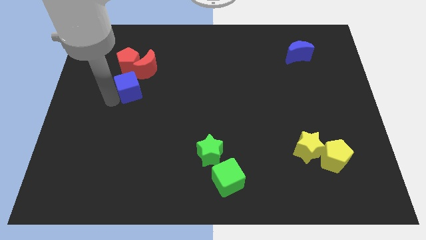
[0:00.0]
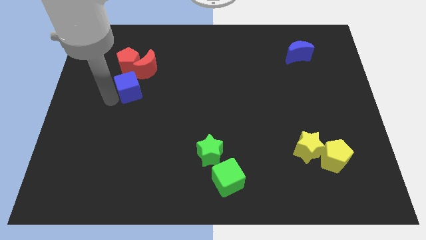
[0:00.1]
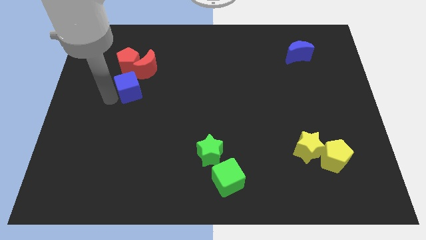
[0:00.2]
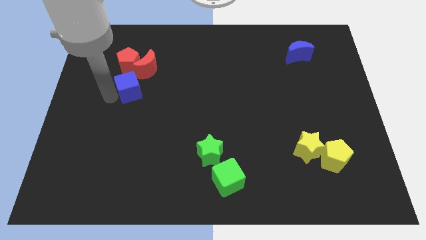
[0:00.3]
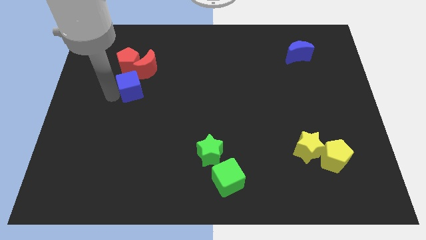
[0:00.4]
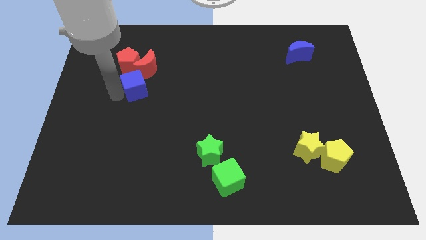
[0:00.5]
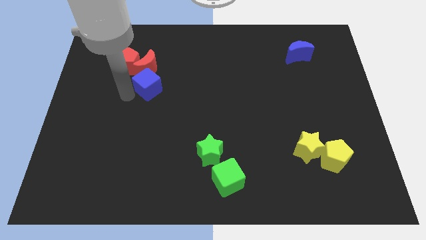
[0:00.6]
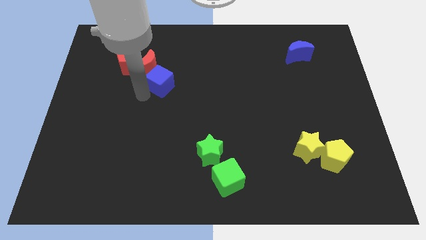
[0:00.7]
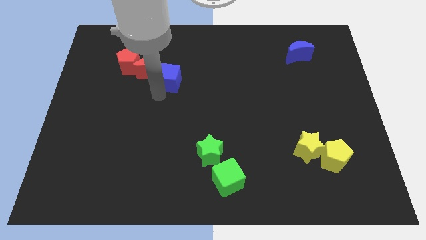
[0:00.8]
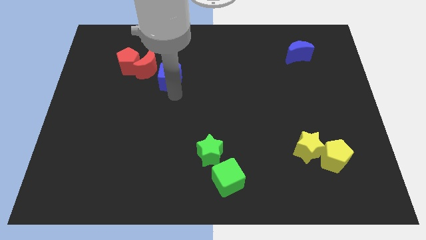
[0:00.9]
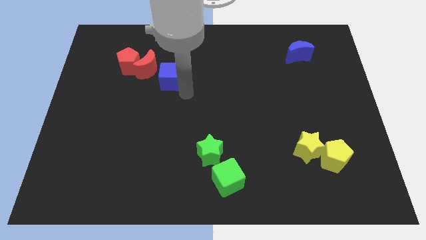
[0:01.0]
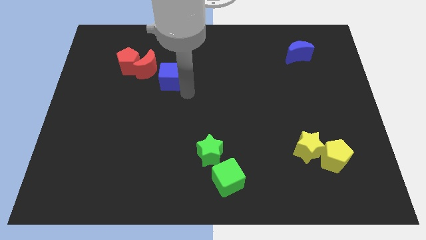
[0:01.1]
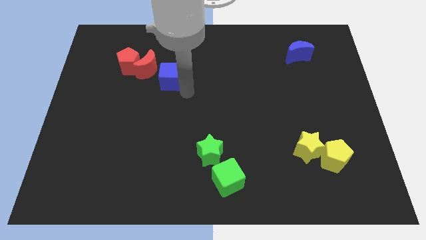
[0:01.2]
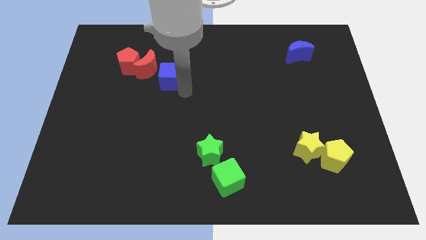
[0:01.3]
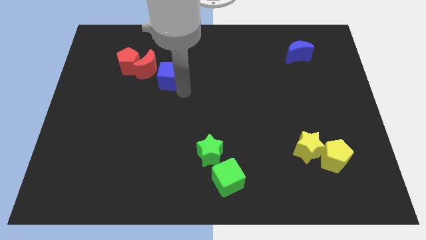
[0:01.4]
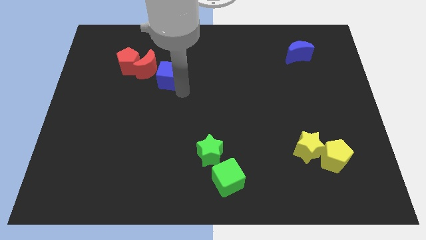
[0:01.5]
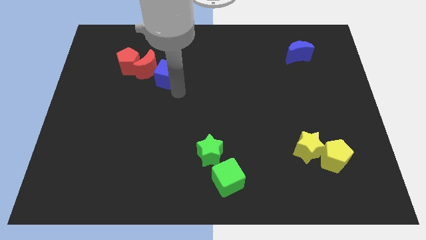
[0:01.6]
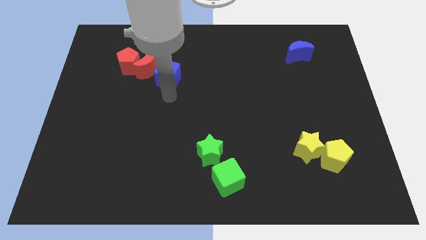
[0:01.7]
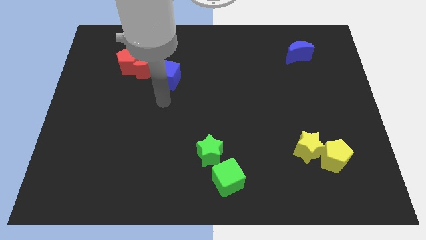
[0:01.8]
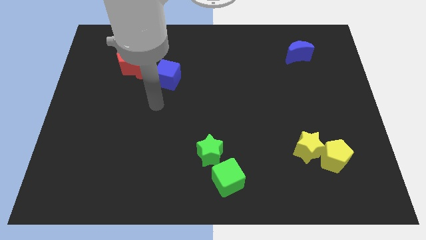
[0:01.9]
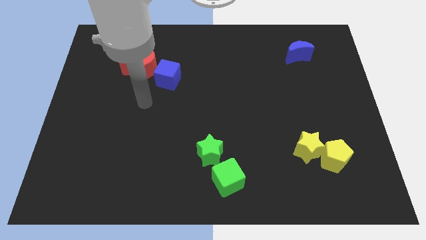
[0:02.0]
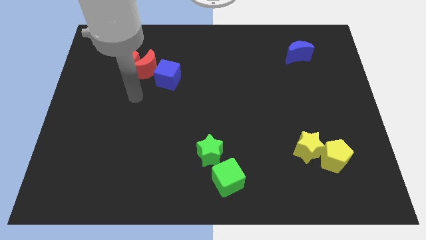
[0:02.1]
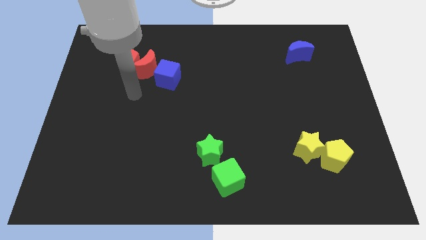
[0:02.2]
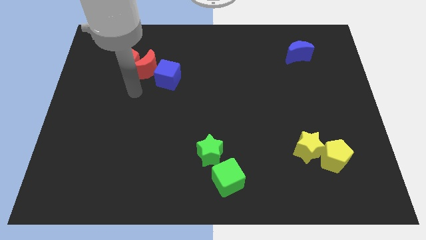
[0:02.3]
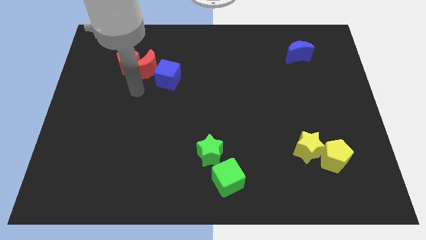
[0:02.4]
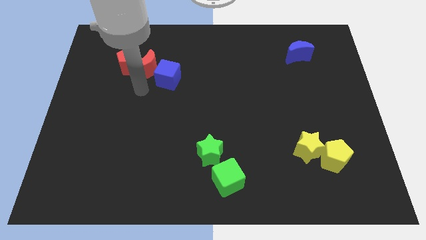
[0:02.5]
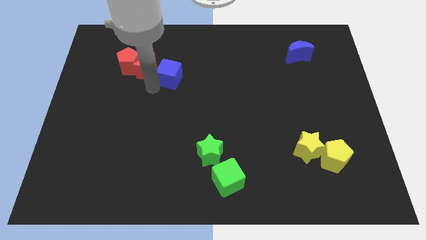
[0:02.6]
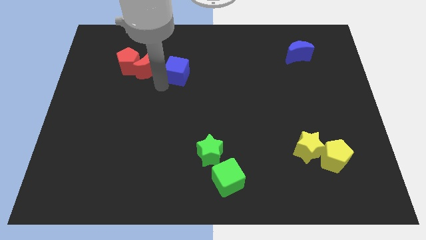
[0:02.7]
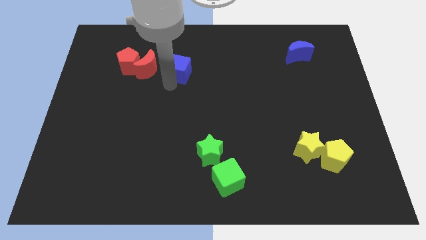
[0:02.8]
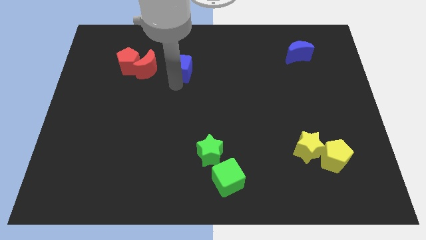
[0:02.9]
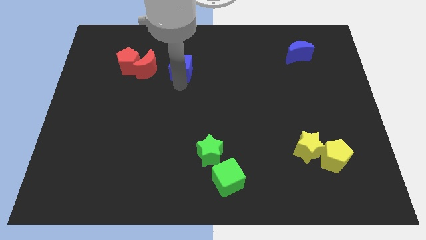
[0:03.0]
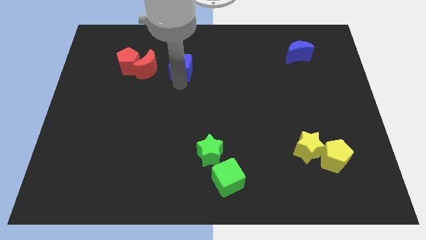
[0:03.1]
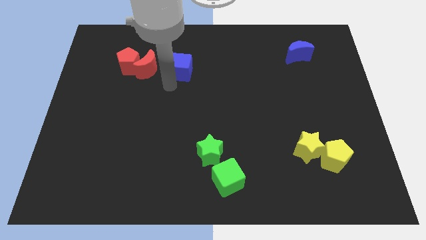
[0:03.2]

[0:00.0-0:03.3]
move the blue cube right to the red crescent

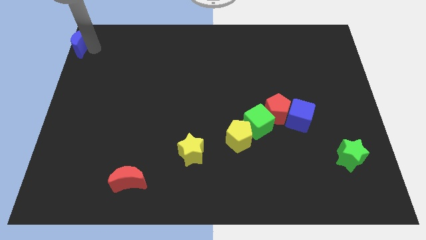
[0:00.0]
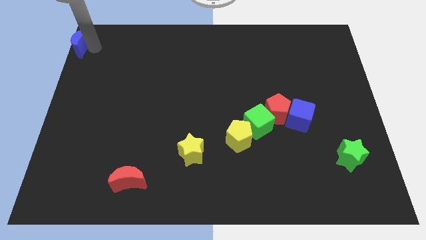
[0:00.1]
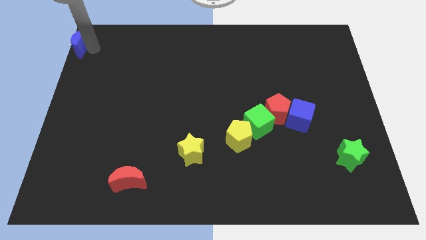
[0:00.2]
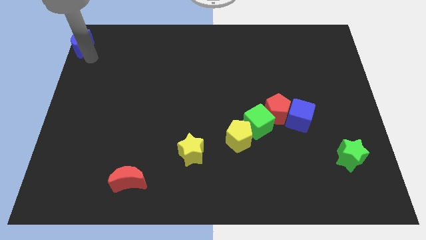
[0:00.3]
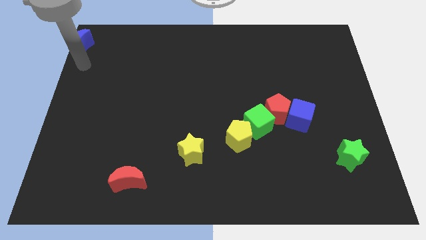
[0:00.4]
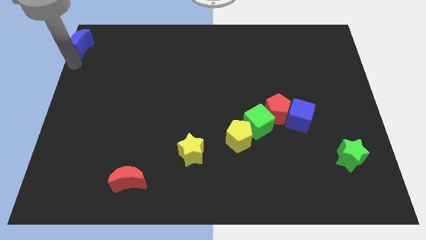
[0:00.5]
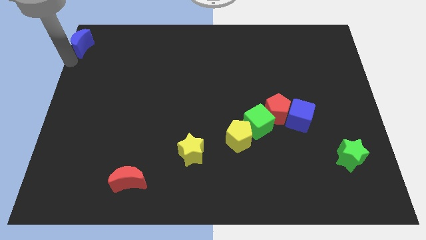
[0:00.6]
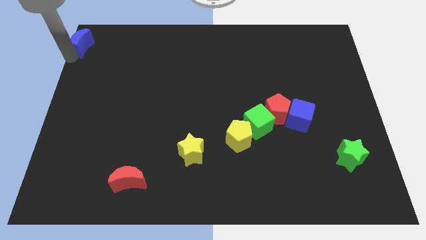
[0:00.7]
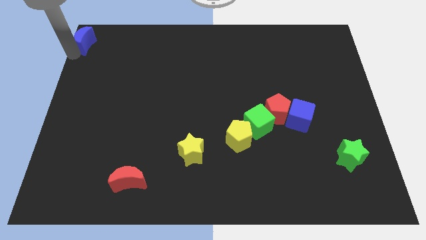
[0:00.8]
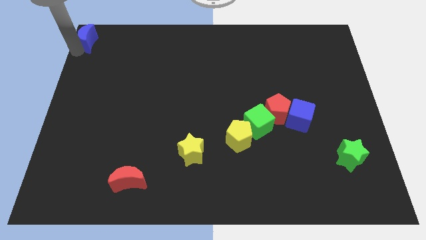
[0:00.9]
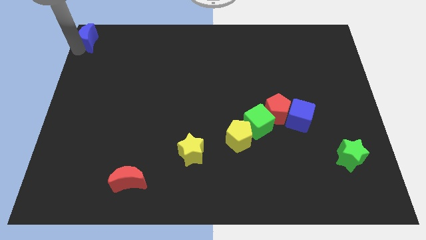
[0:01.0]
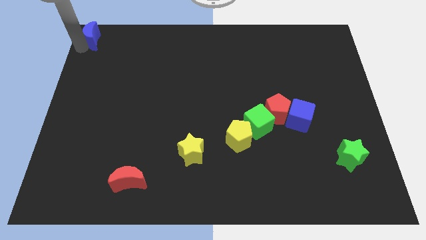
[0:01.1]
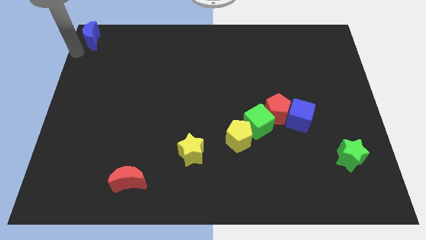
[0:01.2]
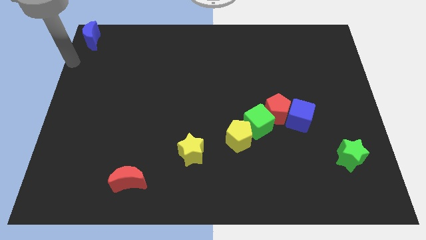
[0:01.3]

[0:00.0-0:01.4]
push the blue crescent to the top left corner of the board

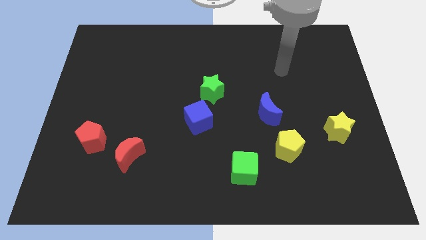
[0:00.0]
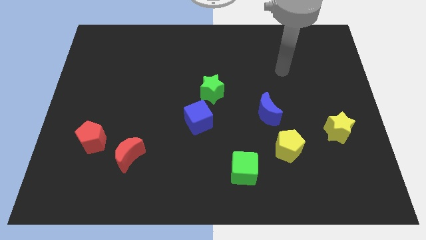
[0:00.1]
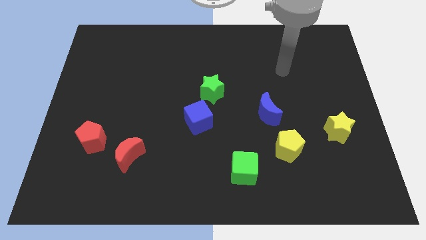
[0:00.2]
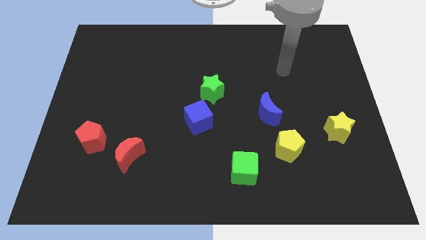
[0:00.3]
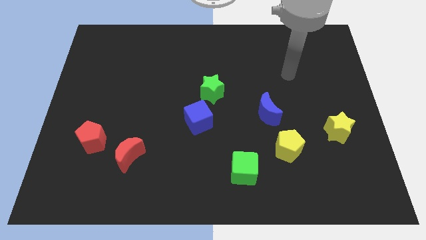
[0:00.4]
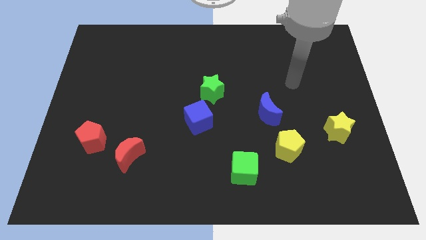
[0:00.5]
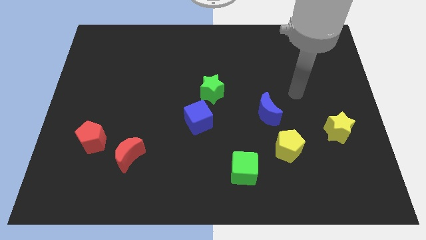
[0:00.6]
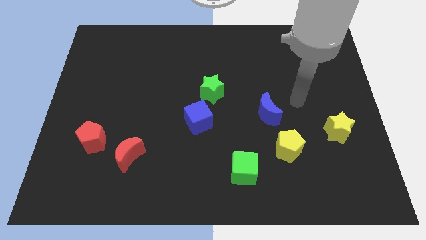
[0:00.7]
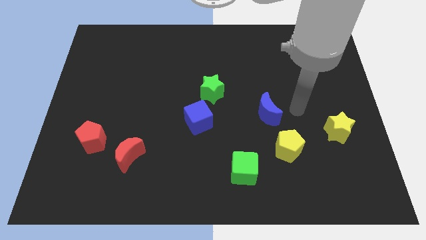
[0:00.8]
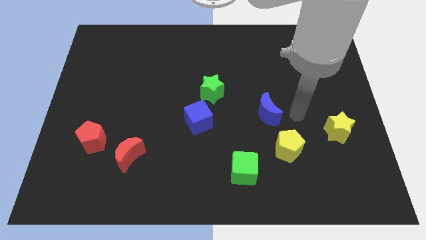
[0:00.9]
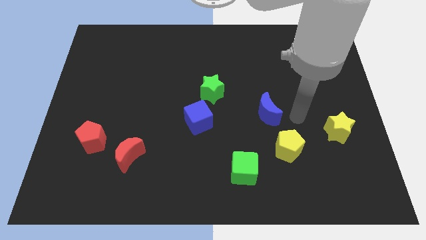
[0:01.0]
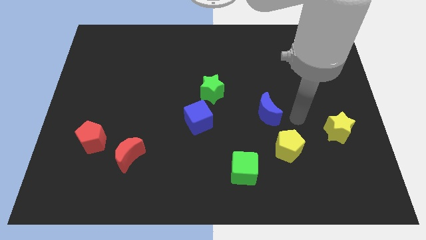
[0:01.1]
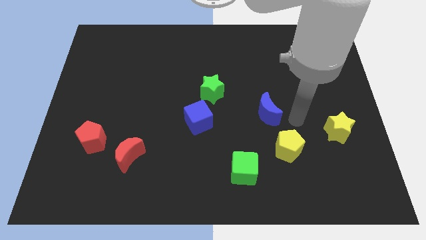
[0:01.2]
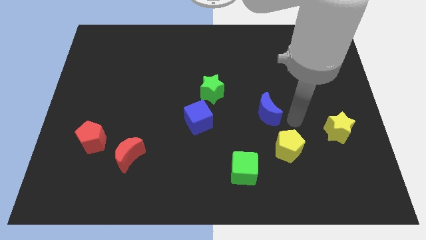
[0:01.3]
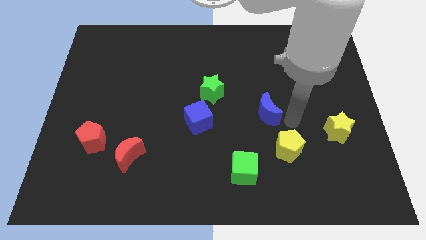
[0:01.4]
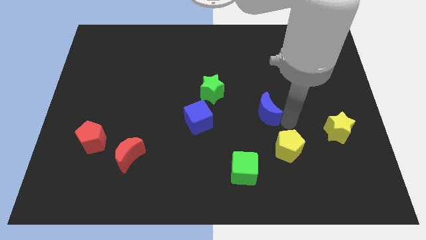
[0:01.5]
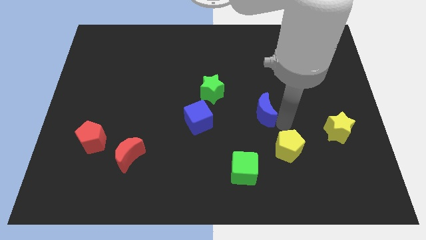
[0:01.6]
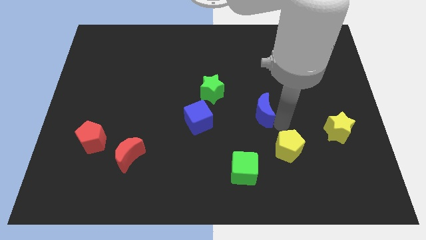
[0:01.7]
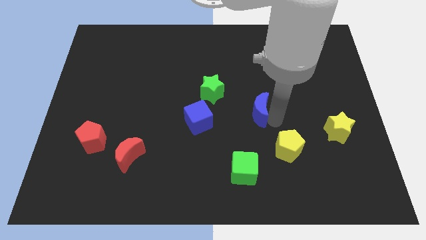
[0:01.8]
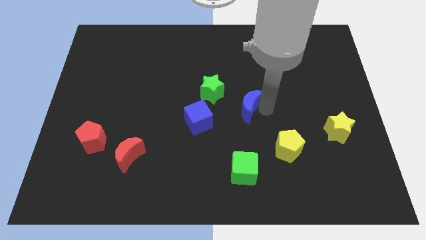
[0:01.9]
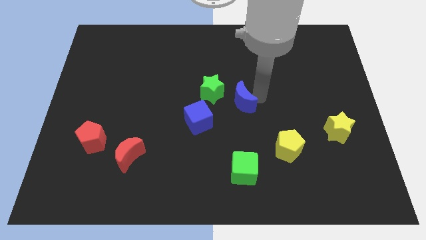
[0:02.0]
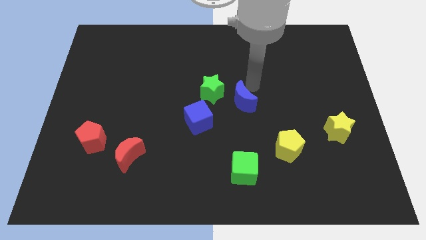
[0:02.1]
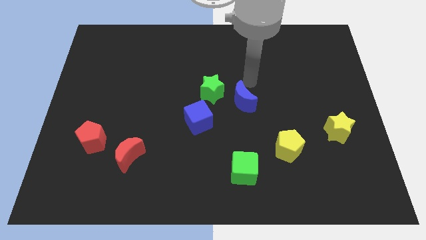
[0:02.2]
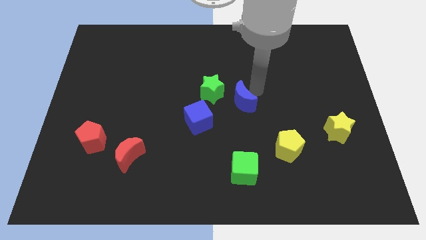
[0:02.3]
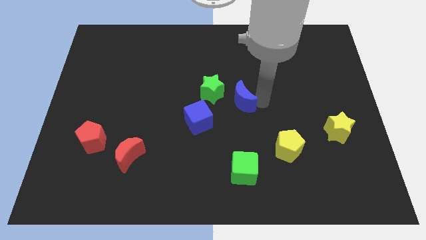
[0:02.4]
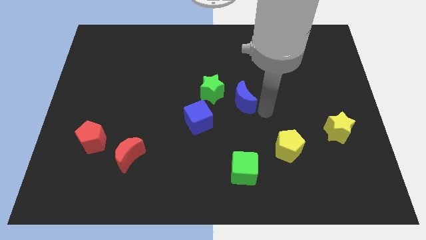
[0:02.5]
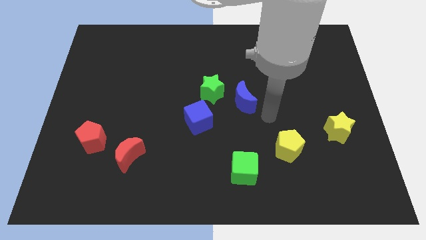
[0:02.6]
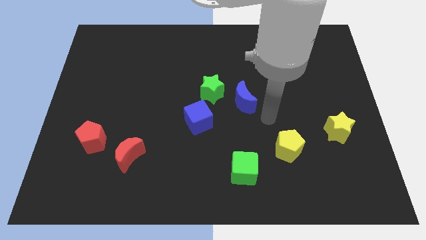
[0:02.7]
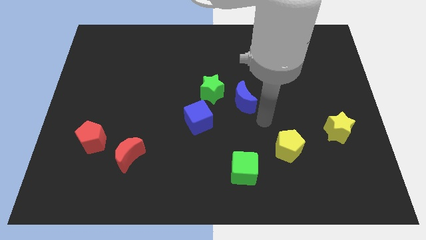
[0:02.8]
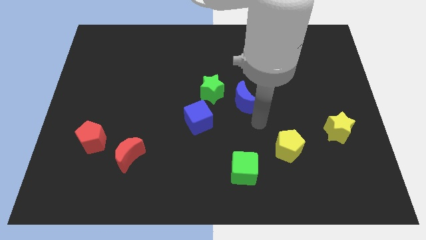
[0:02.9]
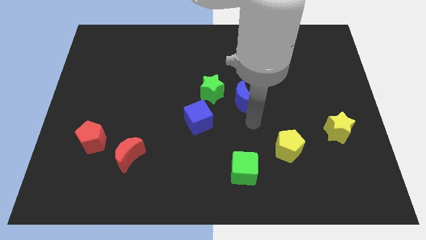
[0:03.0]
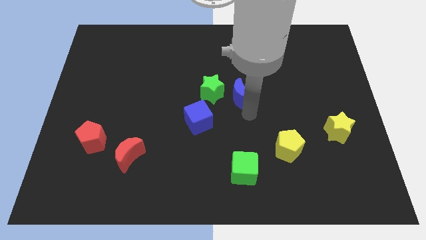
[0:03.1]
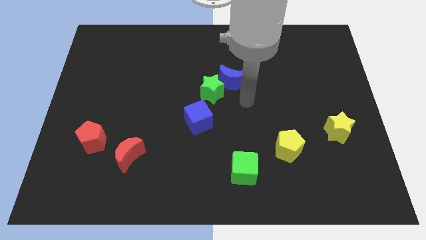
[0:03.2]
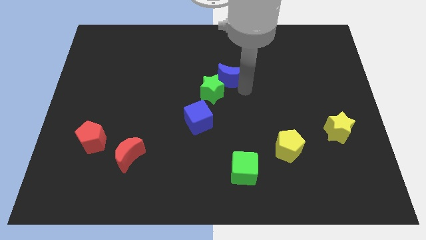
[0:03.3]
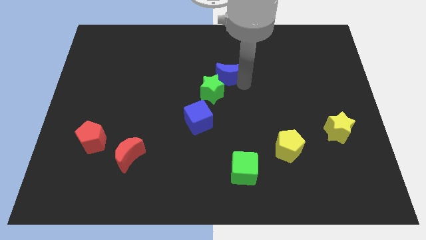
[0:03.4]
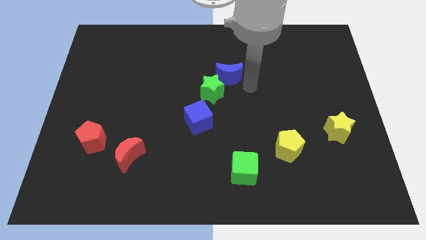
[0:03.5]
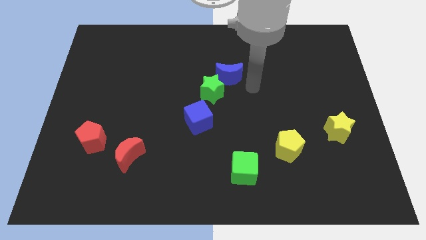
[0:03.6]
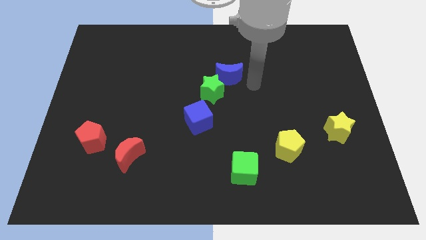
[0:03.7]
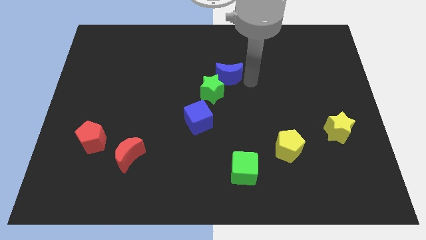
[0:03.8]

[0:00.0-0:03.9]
push blue crescent above green star

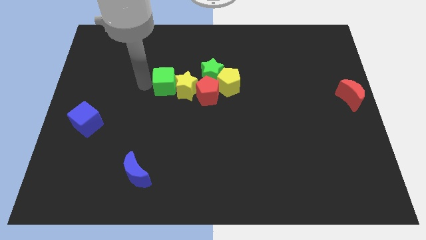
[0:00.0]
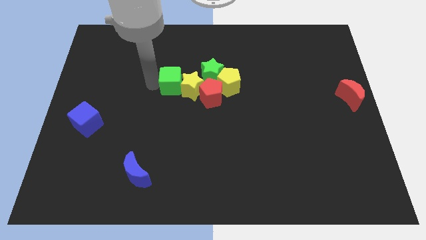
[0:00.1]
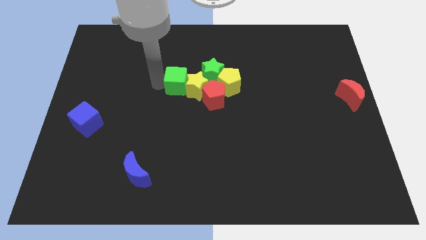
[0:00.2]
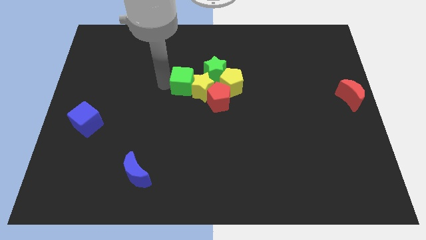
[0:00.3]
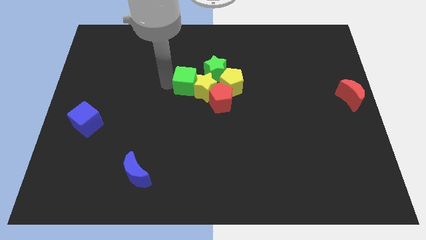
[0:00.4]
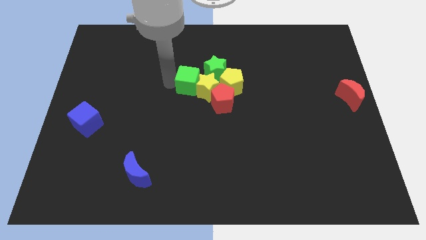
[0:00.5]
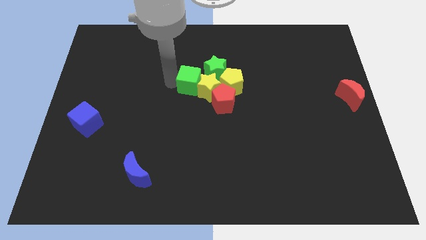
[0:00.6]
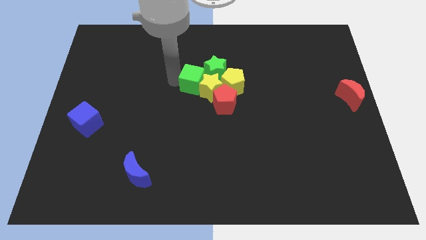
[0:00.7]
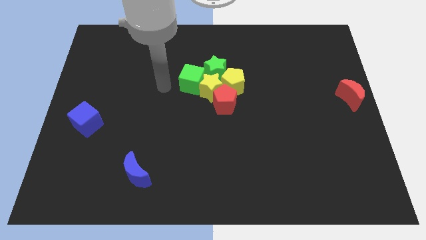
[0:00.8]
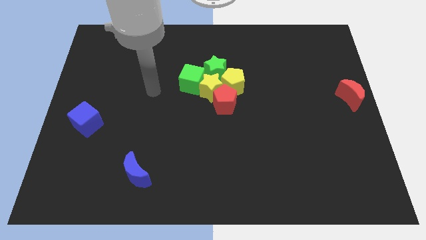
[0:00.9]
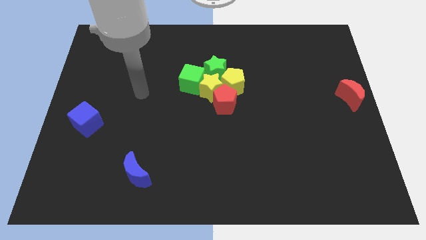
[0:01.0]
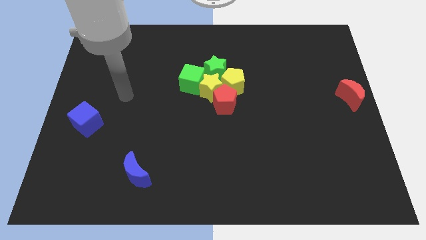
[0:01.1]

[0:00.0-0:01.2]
place green cube to the bottom left of green star
